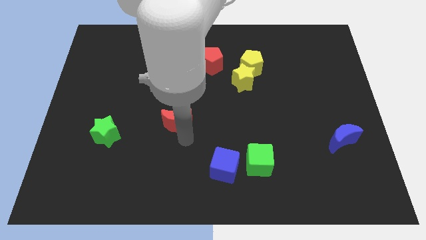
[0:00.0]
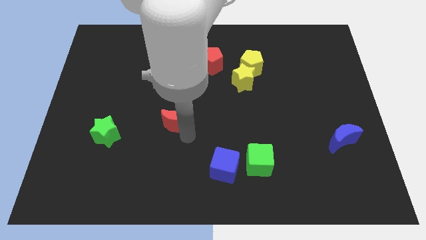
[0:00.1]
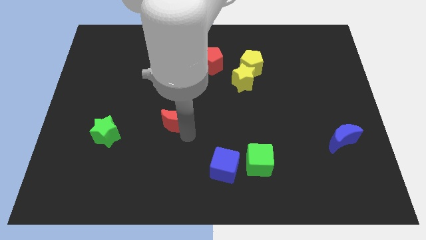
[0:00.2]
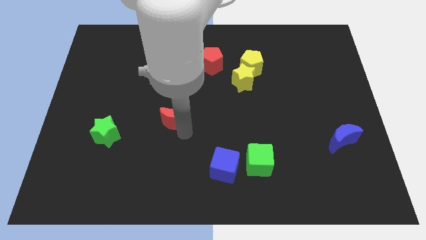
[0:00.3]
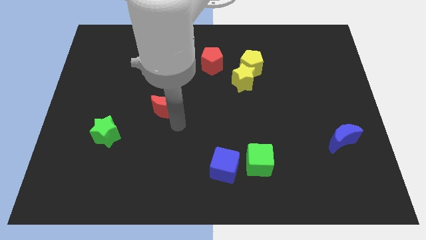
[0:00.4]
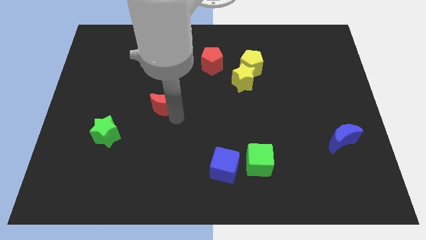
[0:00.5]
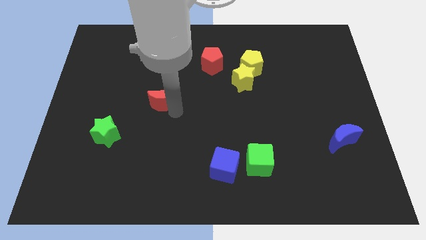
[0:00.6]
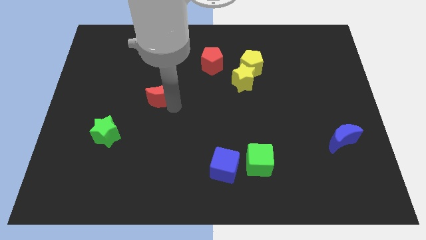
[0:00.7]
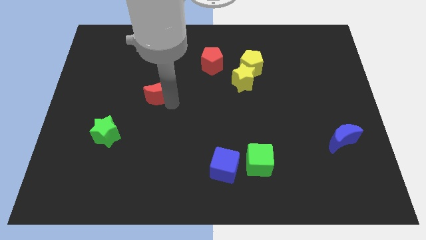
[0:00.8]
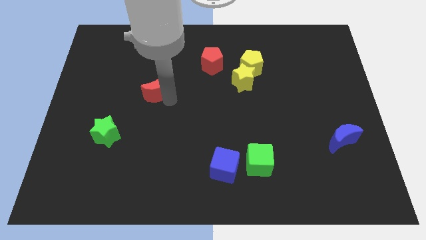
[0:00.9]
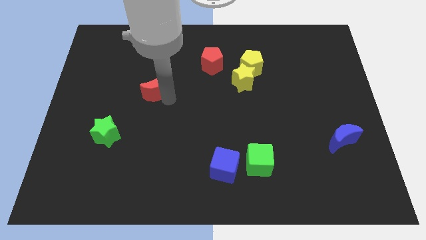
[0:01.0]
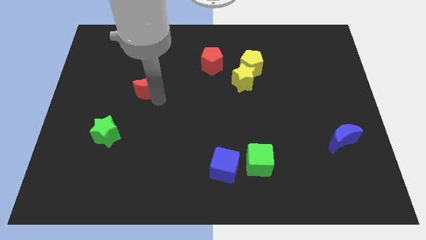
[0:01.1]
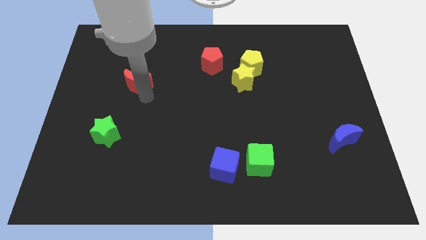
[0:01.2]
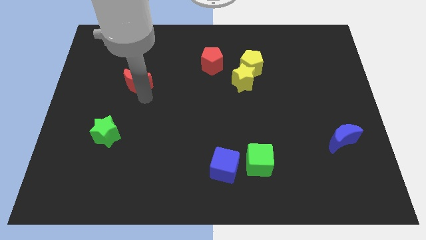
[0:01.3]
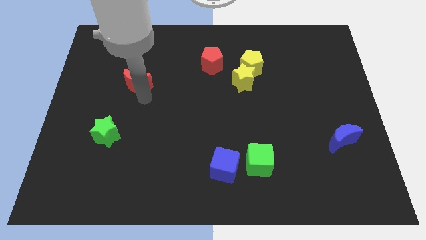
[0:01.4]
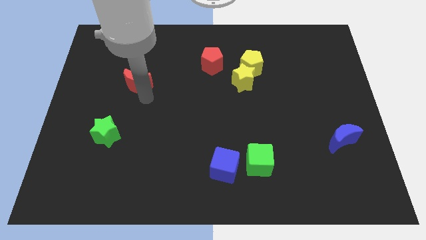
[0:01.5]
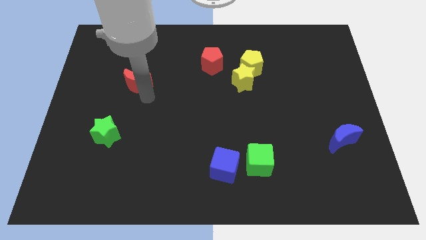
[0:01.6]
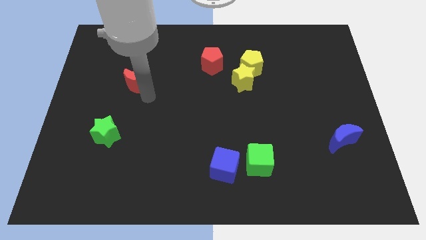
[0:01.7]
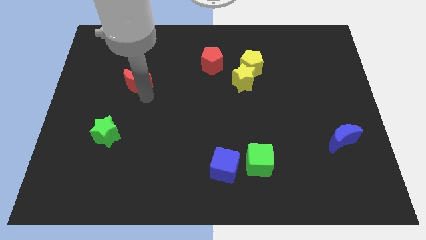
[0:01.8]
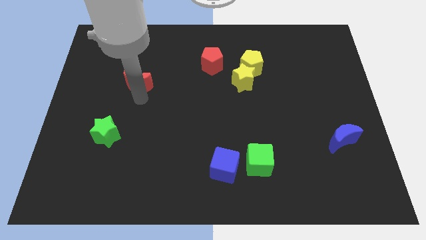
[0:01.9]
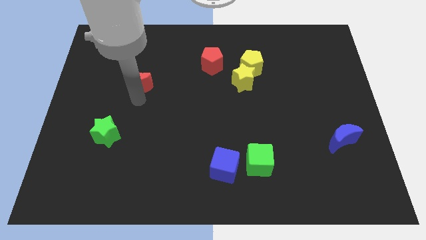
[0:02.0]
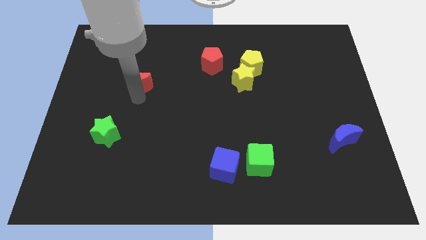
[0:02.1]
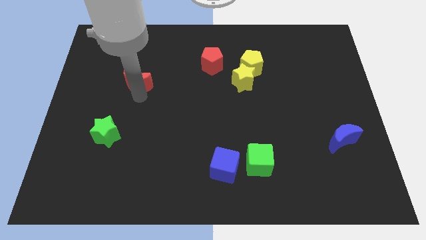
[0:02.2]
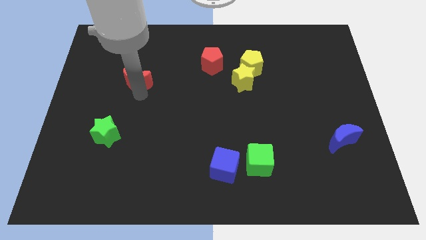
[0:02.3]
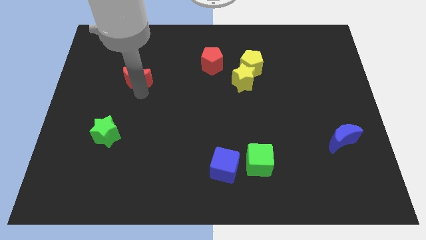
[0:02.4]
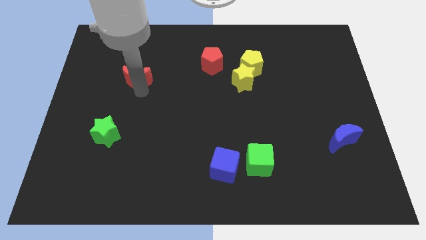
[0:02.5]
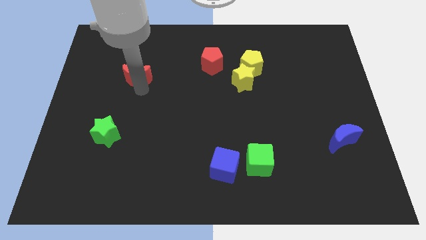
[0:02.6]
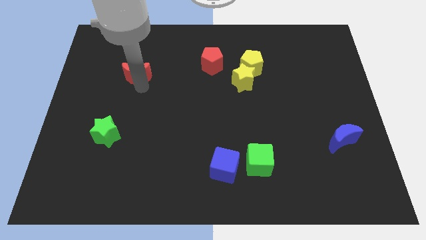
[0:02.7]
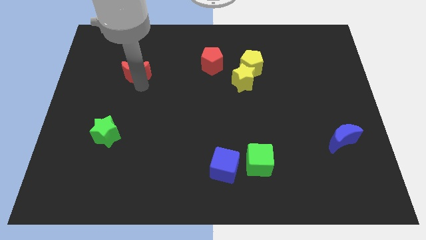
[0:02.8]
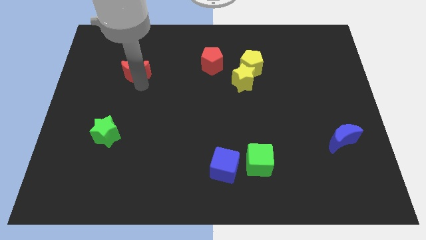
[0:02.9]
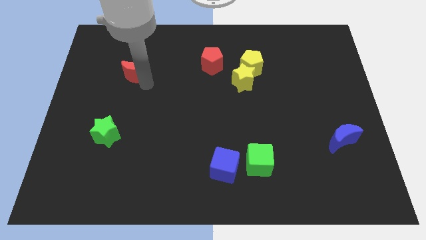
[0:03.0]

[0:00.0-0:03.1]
put the red moon at the top side of the green star

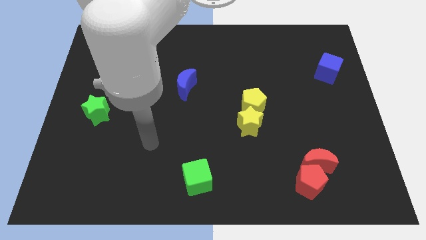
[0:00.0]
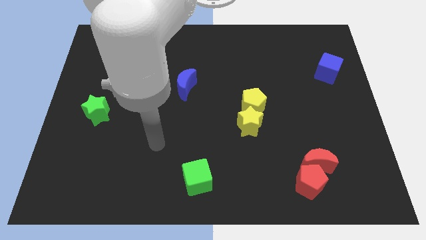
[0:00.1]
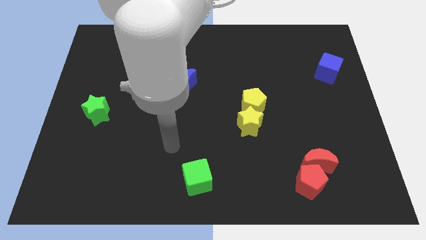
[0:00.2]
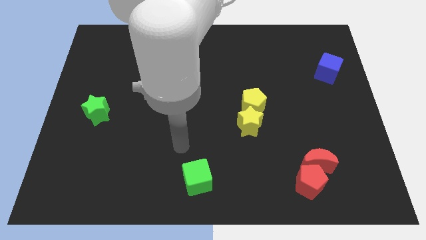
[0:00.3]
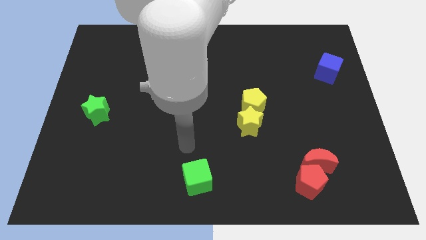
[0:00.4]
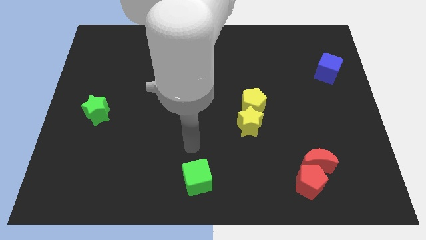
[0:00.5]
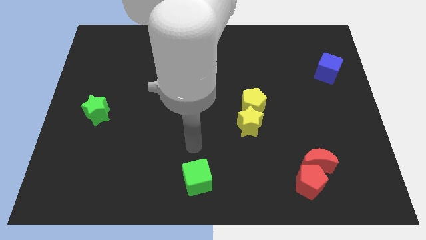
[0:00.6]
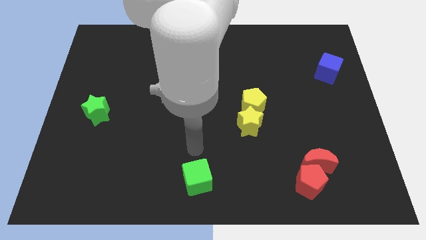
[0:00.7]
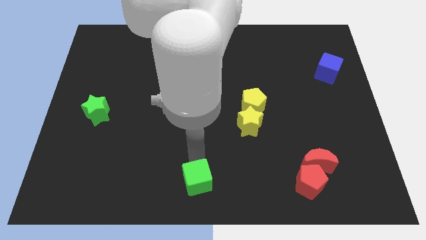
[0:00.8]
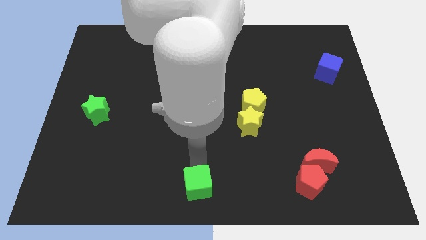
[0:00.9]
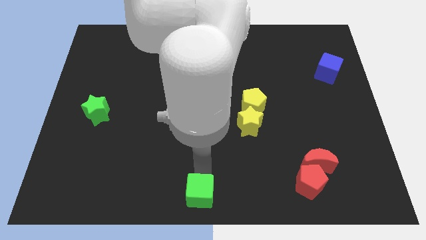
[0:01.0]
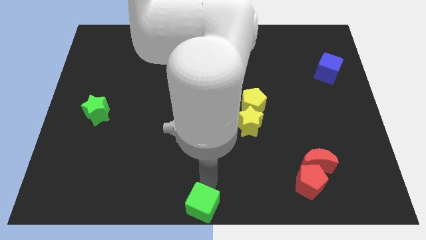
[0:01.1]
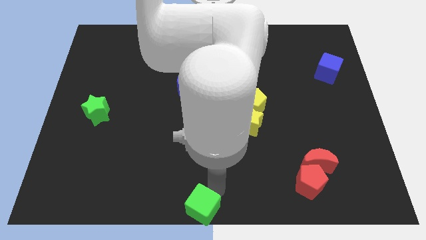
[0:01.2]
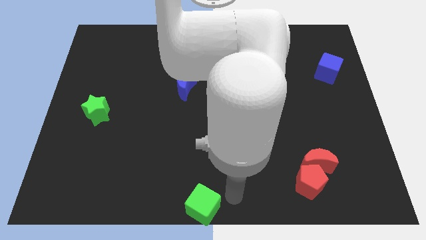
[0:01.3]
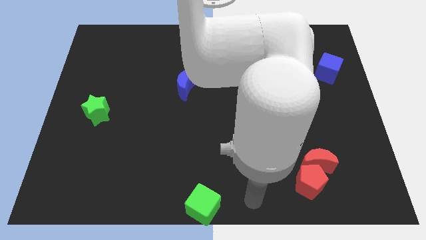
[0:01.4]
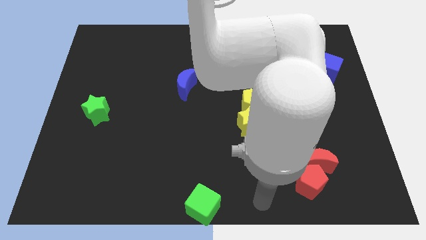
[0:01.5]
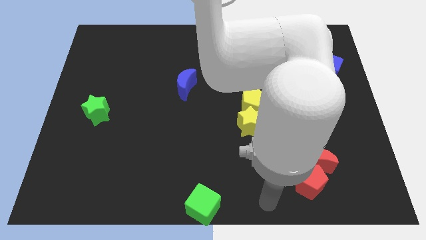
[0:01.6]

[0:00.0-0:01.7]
place the green cube at the bottom center of the board

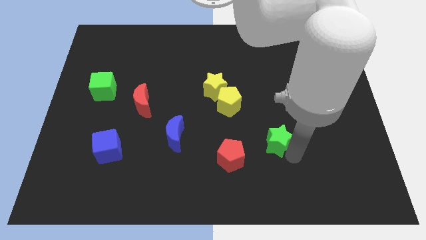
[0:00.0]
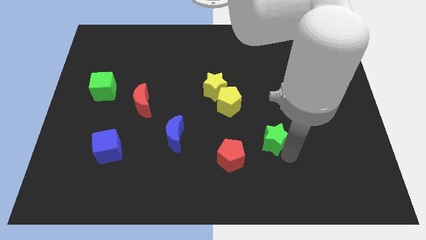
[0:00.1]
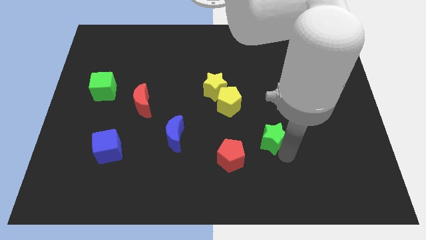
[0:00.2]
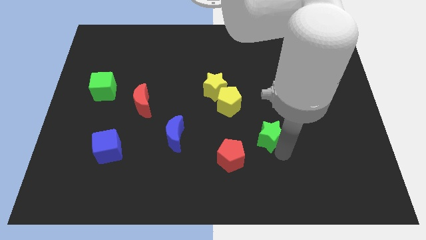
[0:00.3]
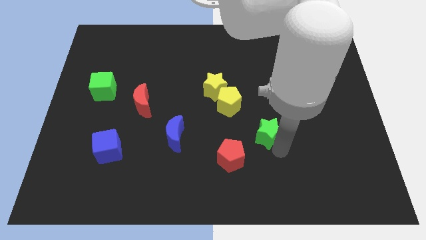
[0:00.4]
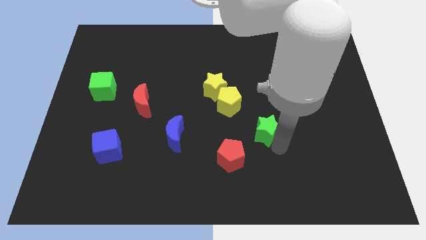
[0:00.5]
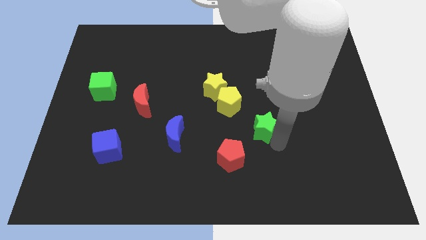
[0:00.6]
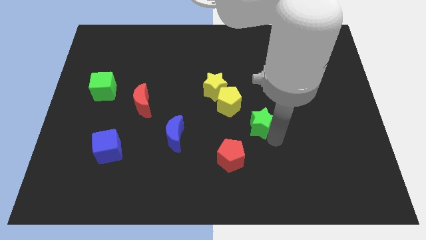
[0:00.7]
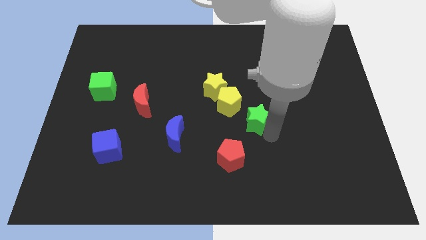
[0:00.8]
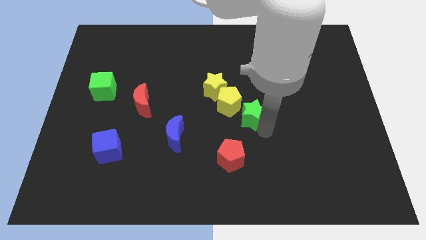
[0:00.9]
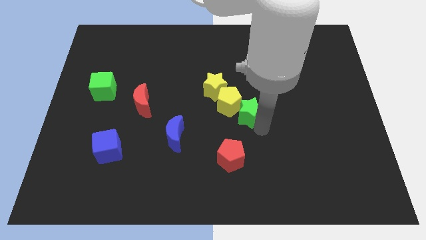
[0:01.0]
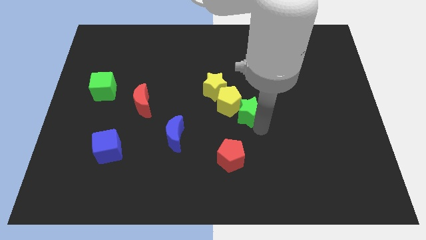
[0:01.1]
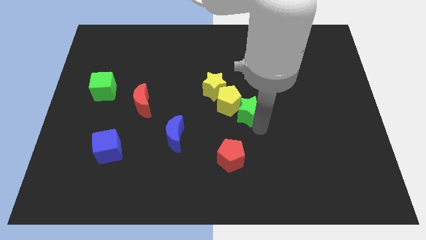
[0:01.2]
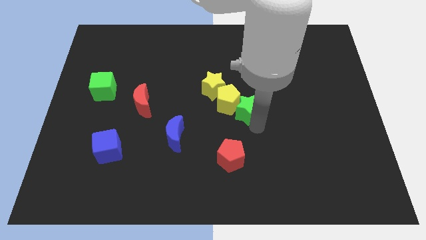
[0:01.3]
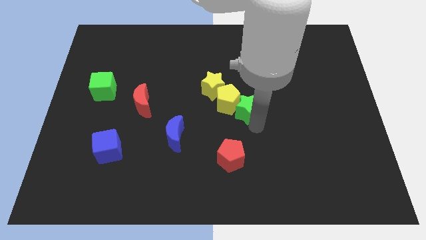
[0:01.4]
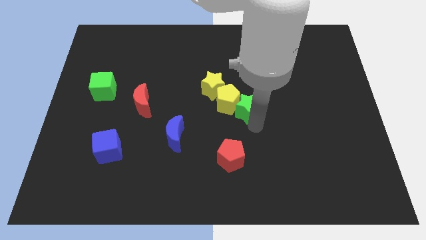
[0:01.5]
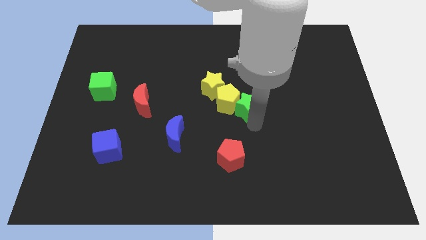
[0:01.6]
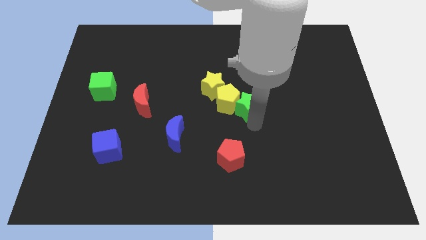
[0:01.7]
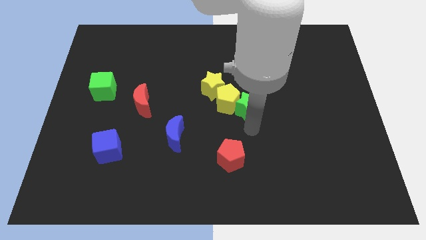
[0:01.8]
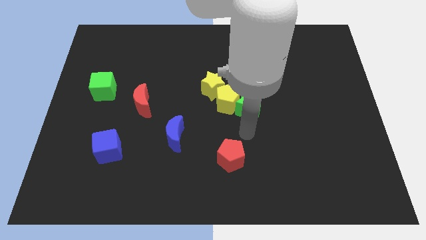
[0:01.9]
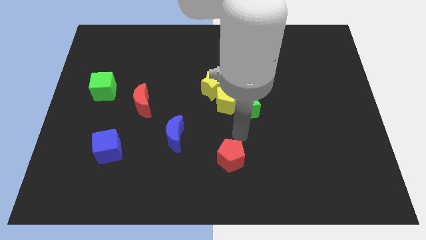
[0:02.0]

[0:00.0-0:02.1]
push the green star diagonal to red pentagon

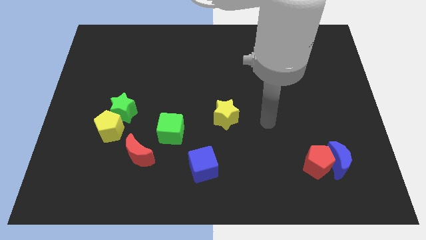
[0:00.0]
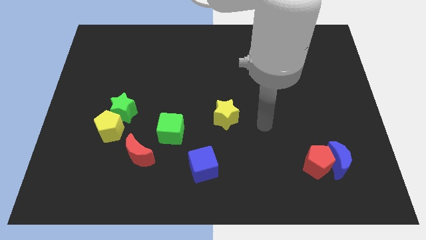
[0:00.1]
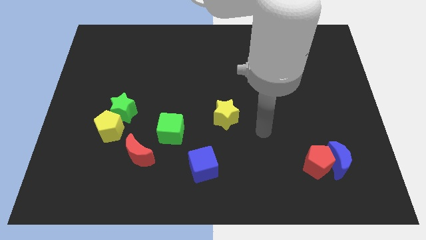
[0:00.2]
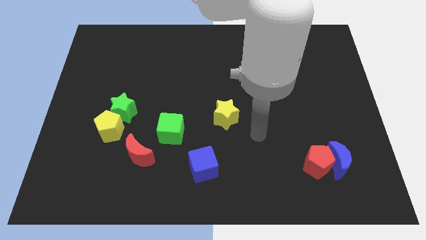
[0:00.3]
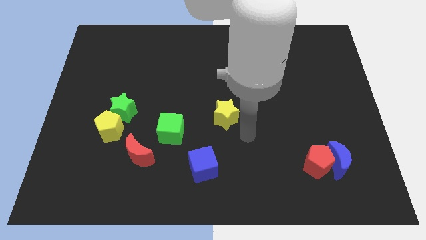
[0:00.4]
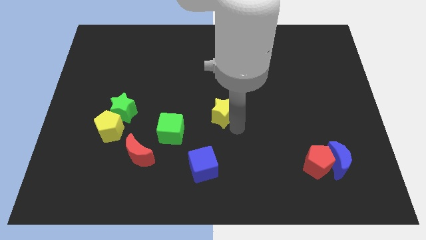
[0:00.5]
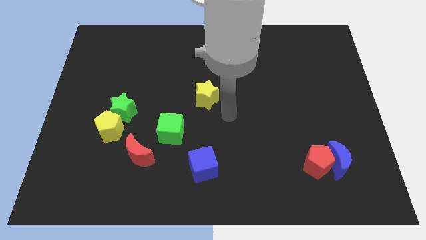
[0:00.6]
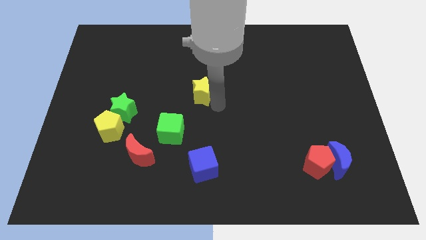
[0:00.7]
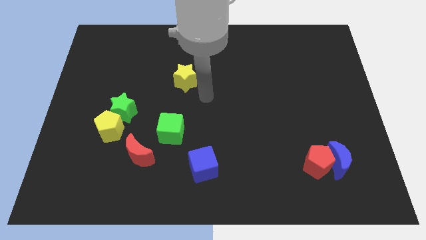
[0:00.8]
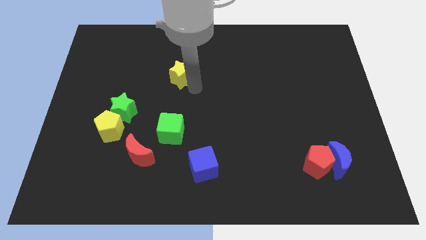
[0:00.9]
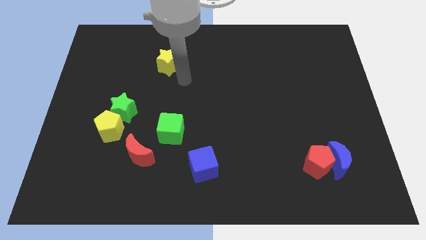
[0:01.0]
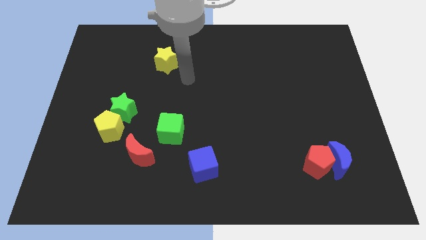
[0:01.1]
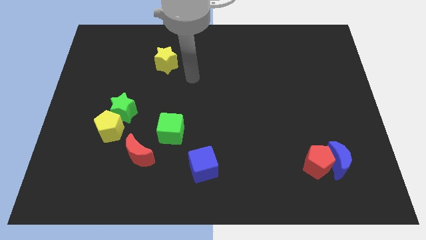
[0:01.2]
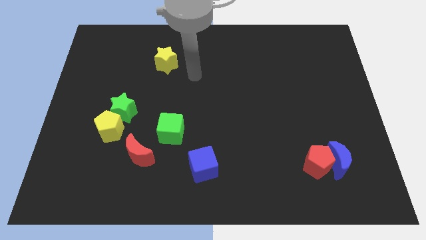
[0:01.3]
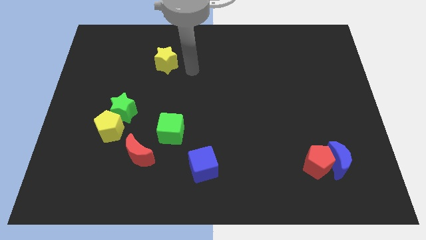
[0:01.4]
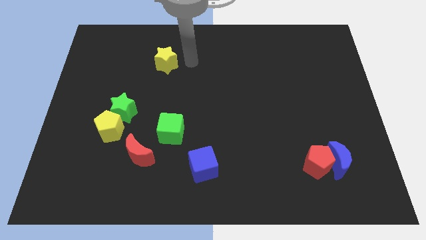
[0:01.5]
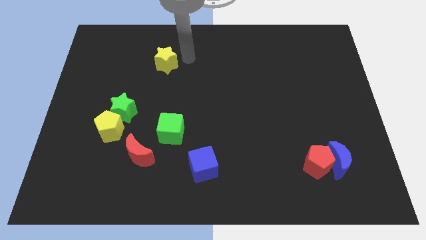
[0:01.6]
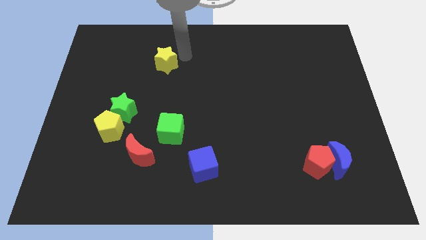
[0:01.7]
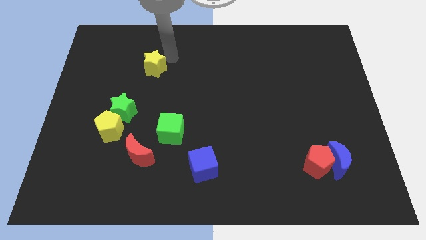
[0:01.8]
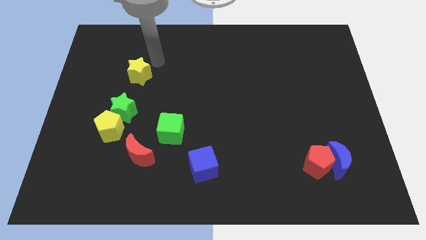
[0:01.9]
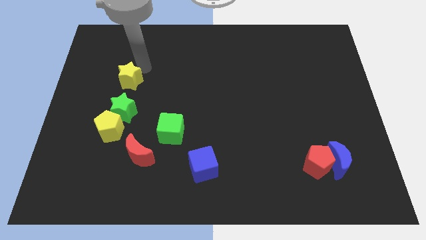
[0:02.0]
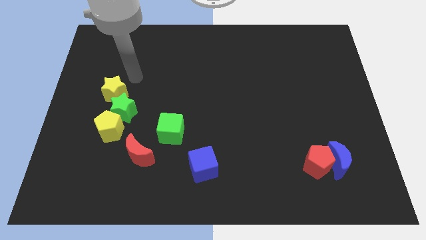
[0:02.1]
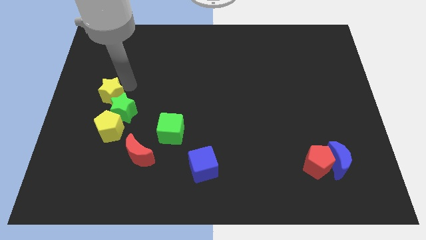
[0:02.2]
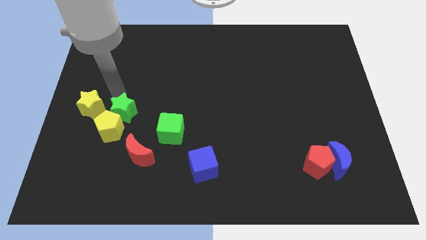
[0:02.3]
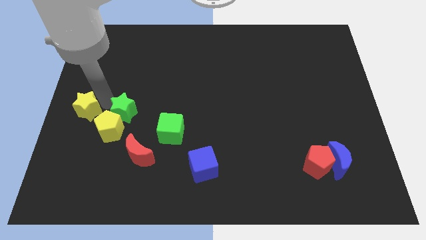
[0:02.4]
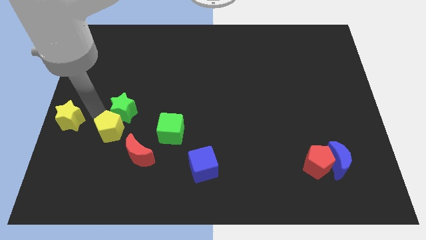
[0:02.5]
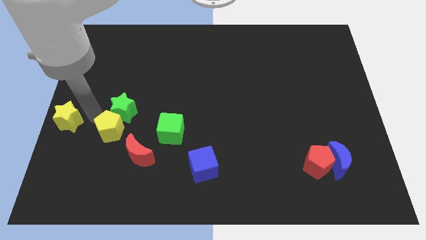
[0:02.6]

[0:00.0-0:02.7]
push yellow star towards the middle left corner
